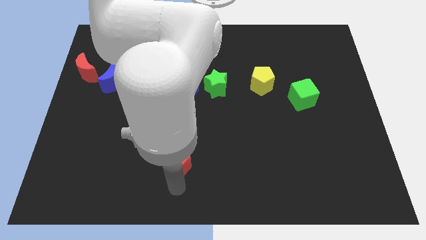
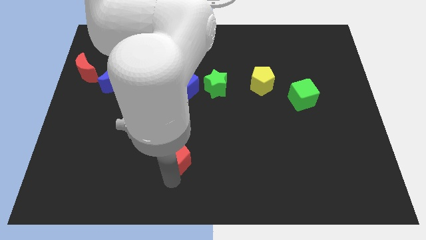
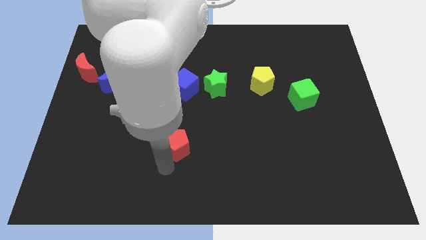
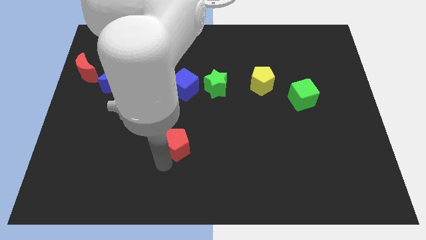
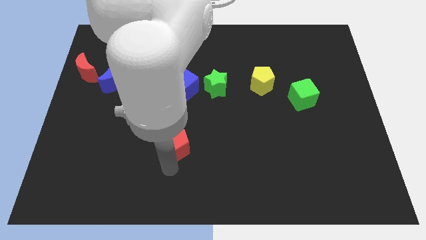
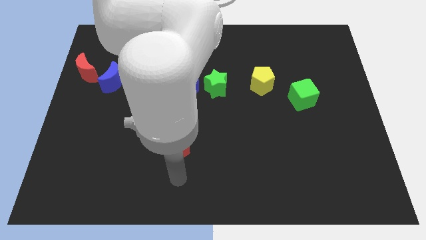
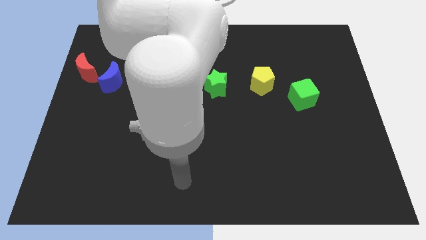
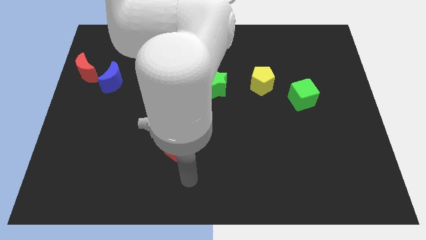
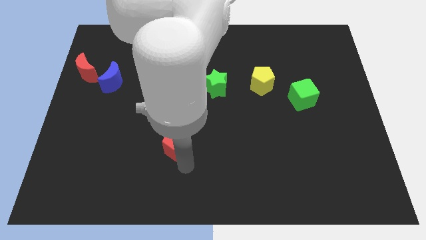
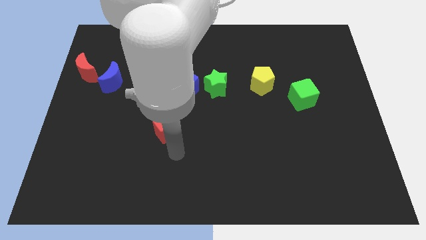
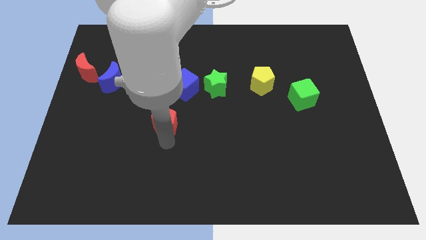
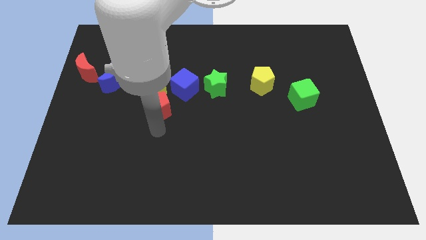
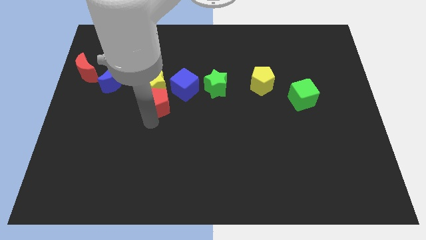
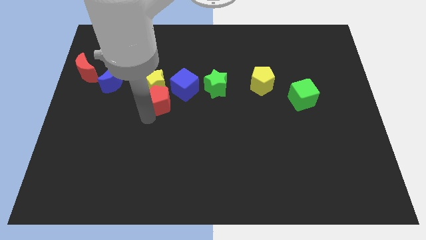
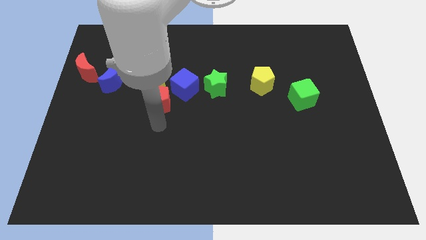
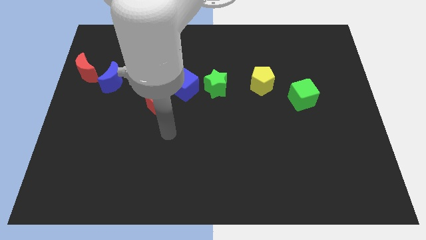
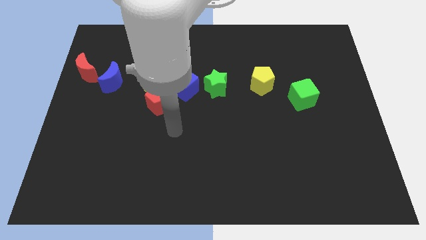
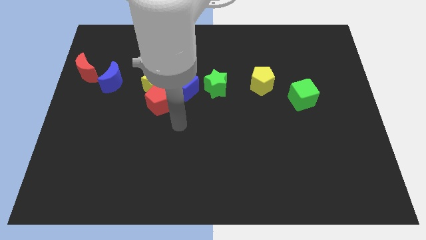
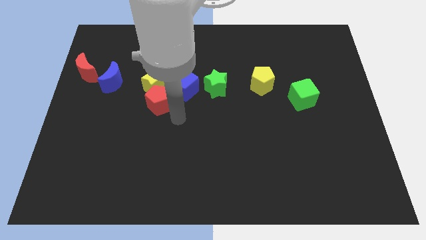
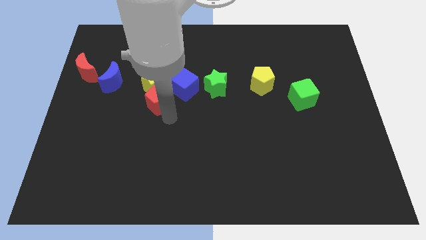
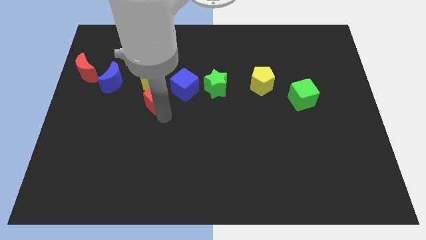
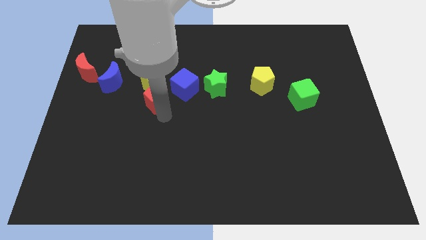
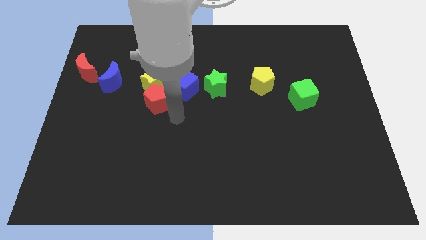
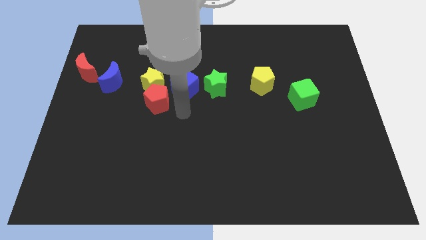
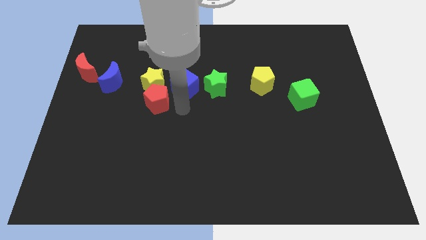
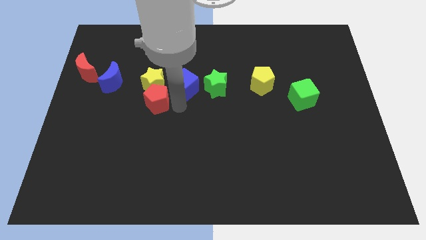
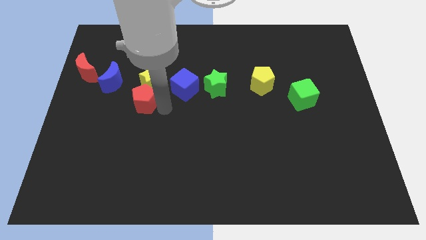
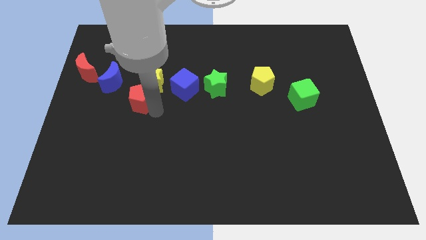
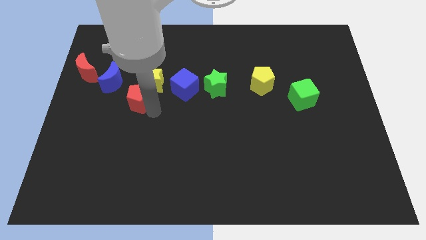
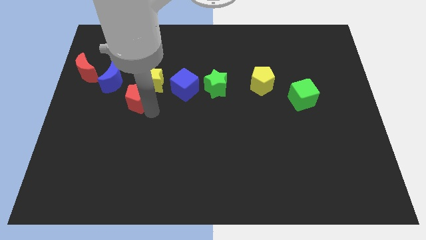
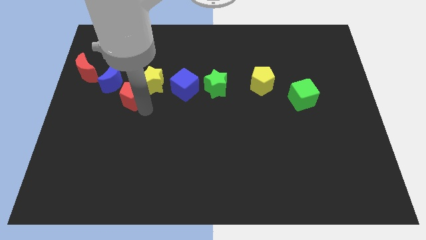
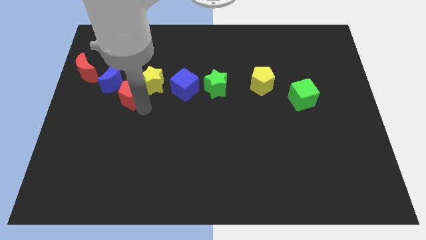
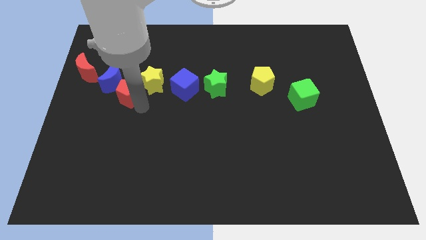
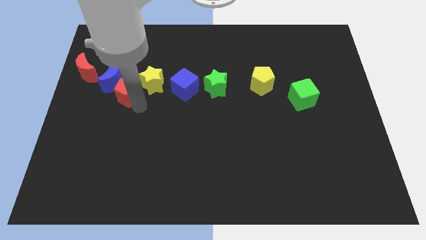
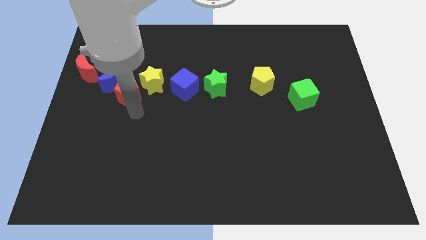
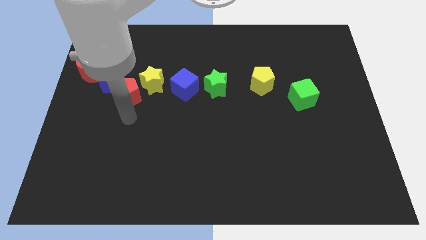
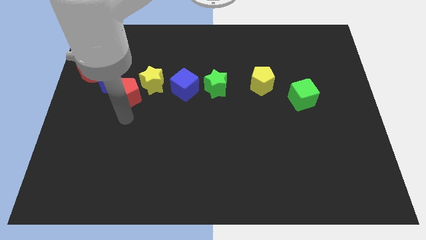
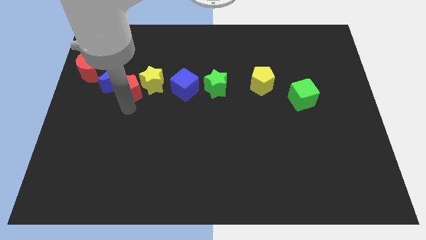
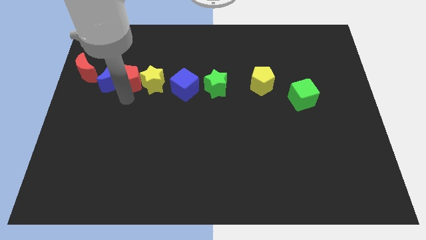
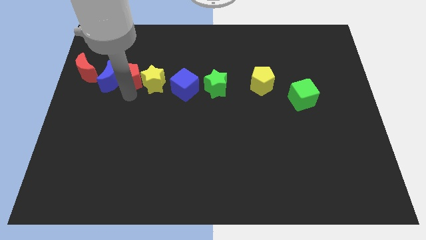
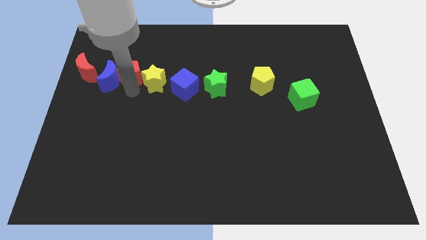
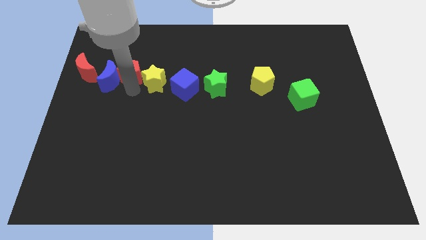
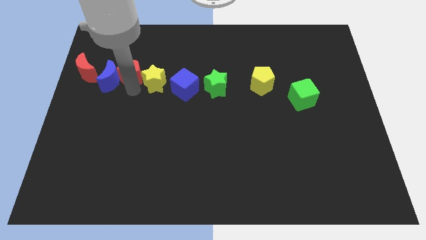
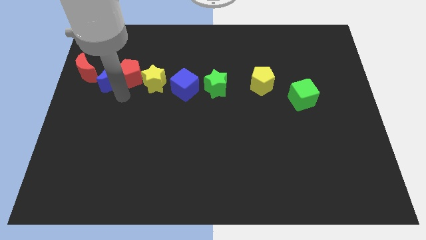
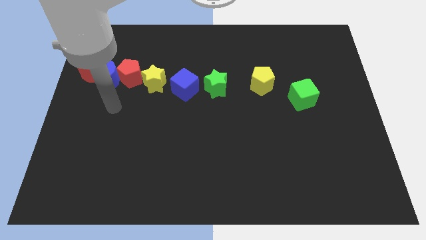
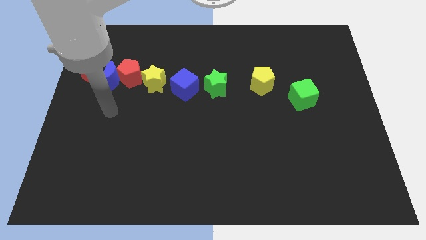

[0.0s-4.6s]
move the red pentagon in between of yellow star blue moon

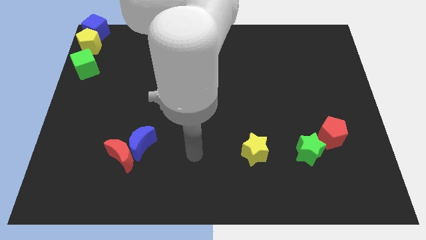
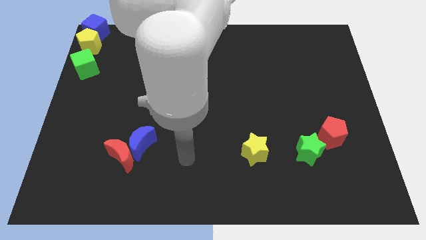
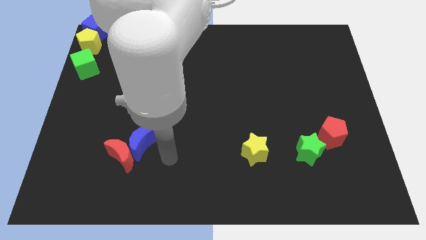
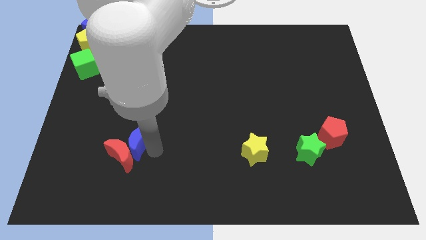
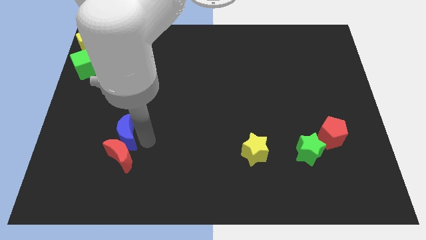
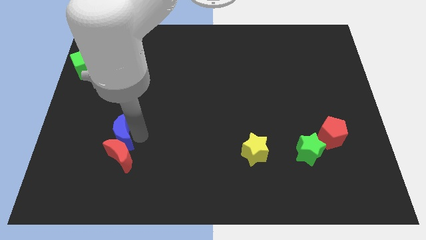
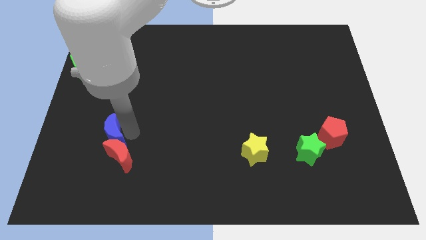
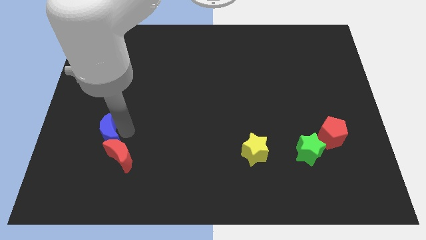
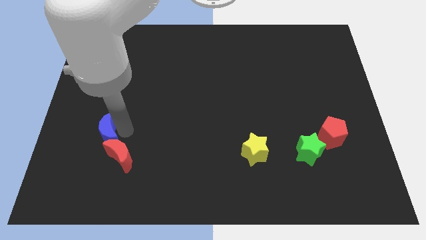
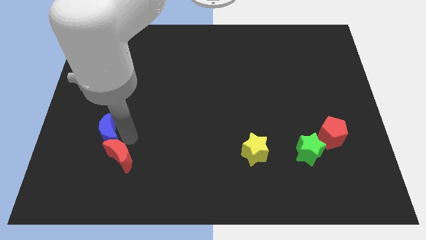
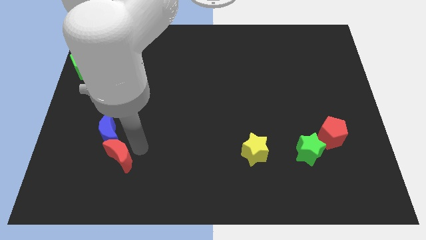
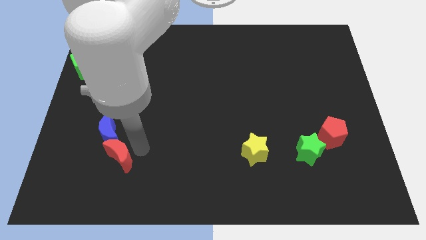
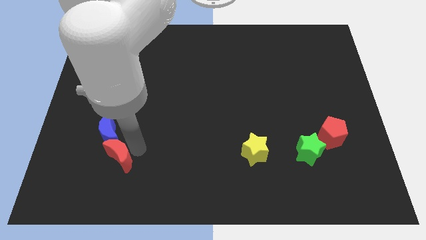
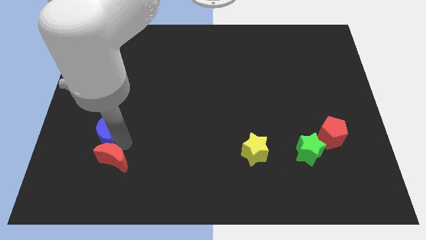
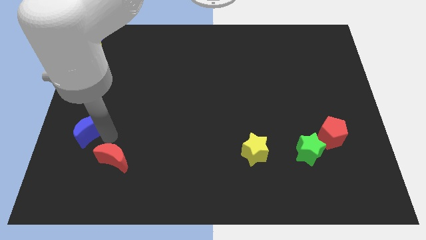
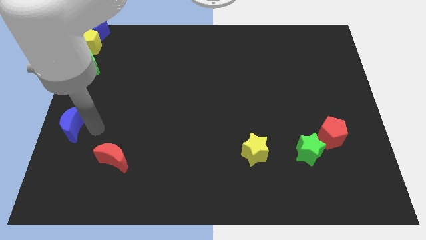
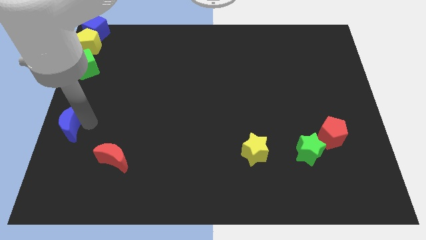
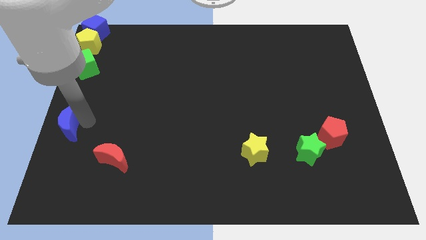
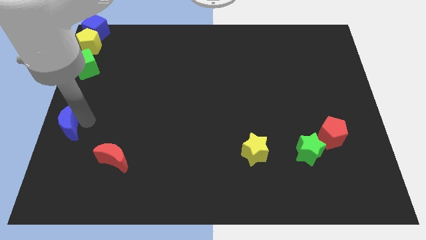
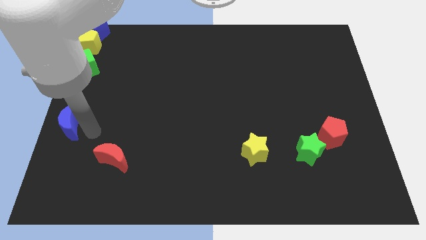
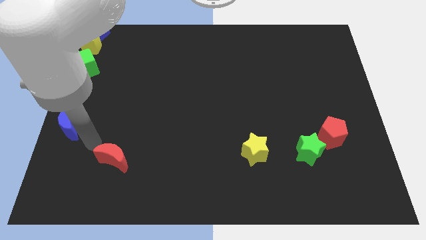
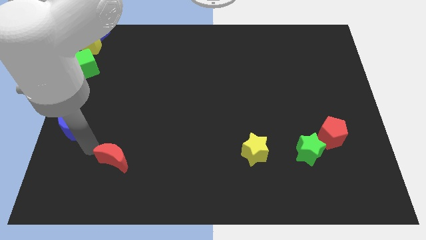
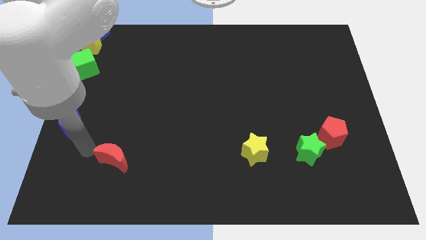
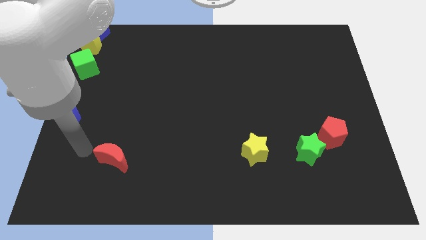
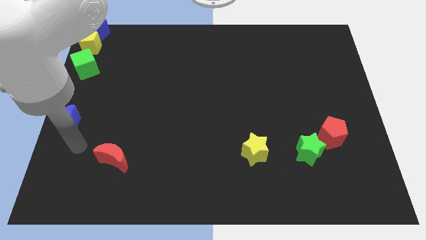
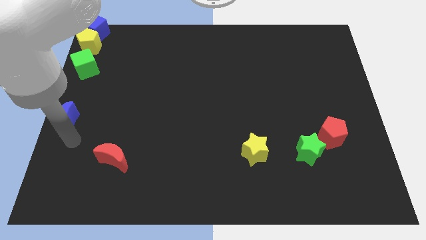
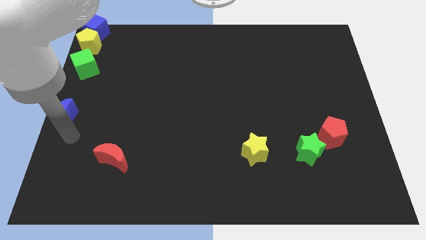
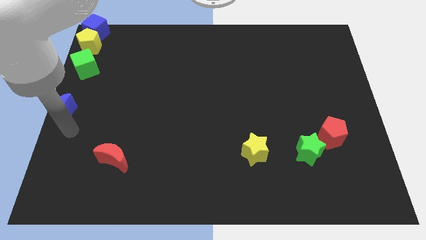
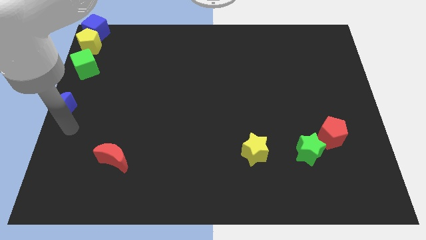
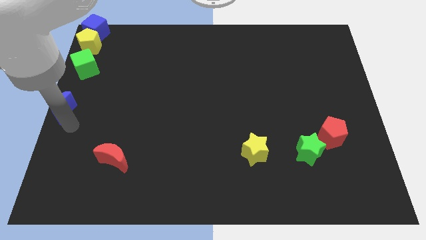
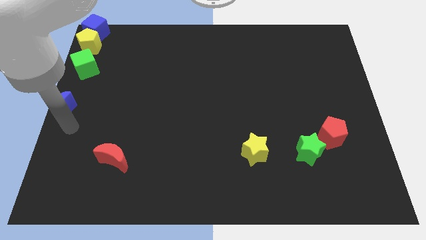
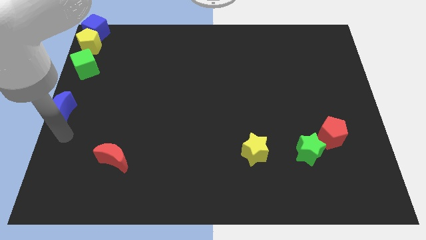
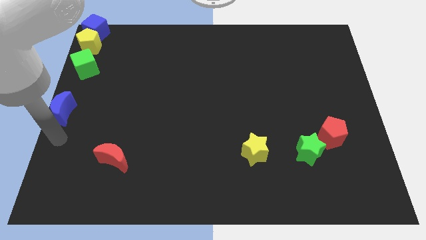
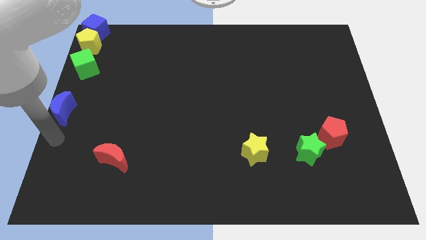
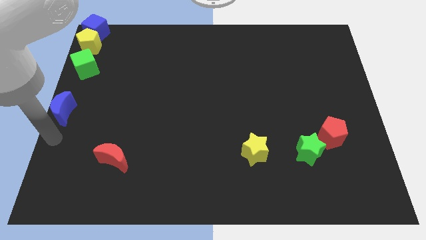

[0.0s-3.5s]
separate the blue moon and red moon

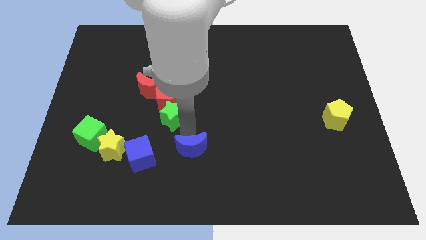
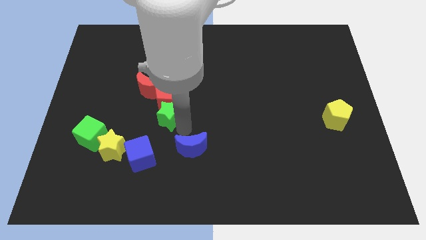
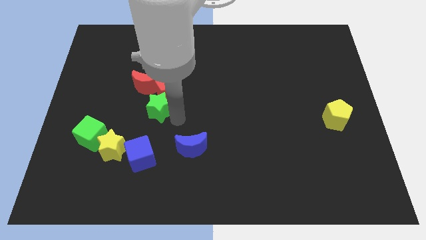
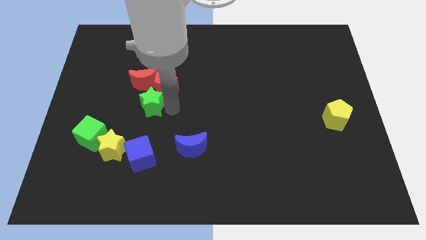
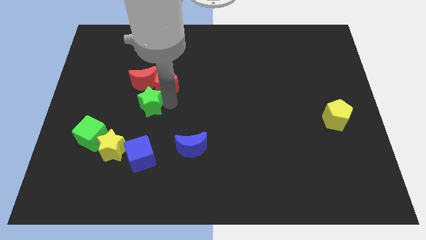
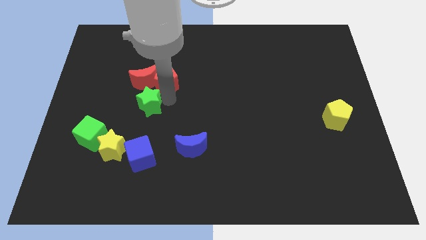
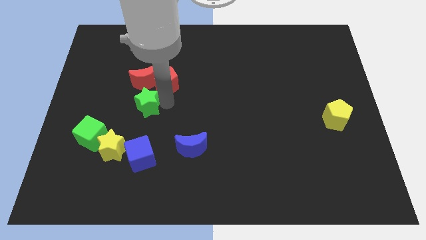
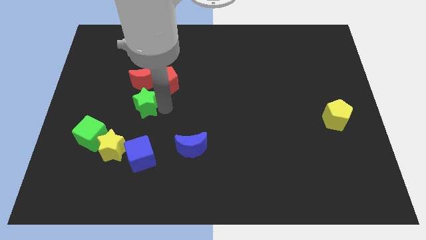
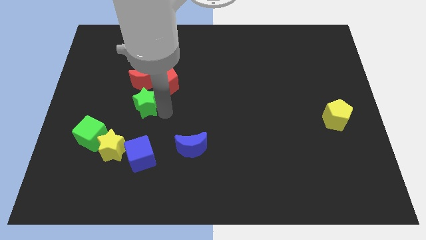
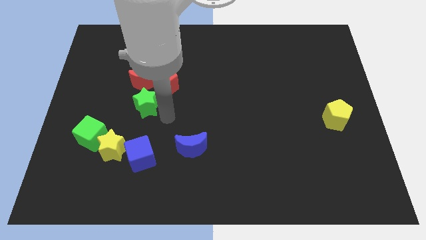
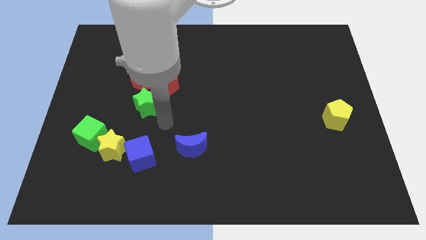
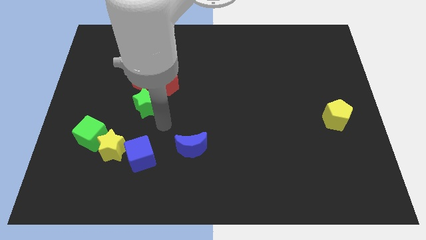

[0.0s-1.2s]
move the green star into the red crescent
